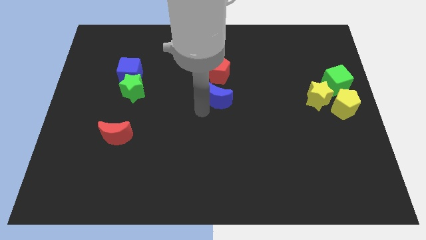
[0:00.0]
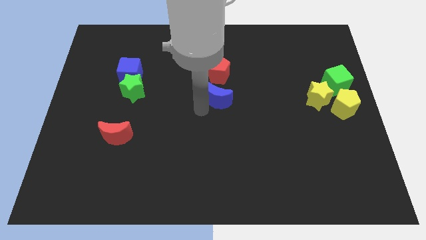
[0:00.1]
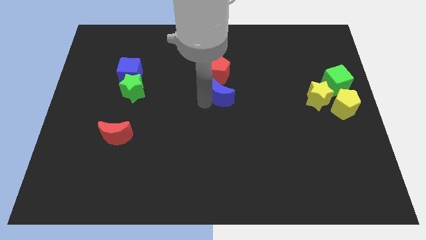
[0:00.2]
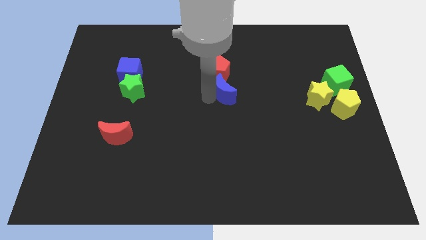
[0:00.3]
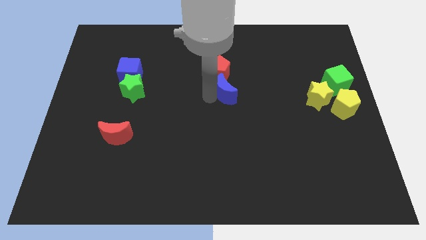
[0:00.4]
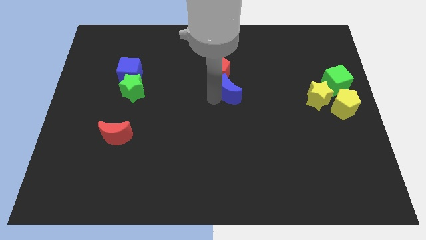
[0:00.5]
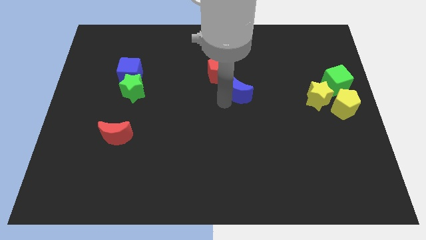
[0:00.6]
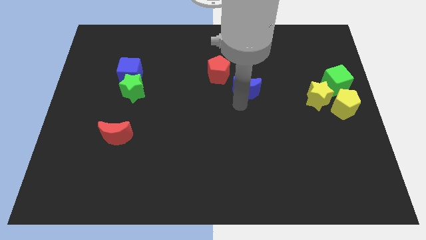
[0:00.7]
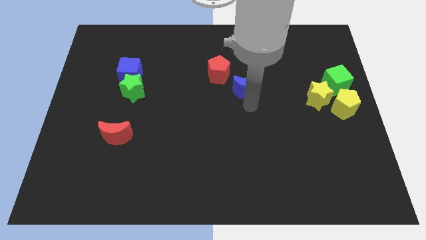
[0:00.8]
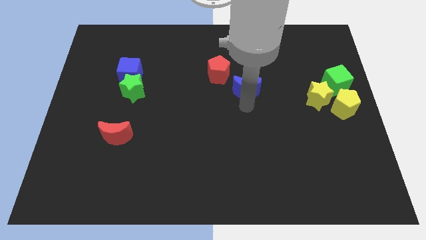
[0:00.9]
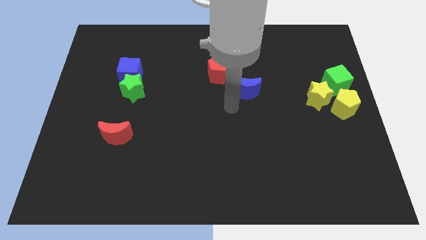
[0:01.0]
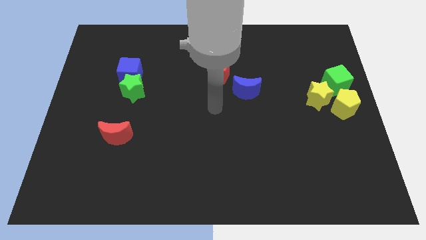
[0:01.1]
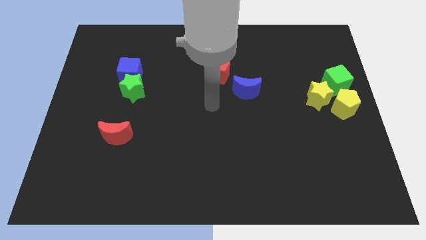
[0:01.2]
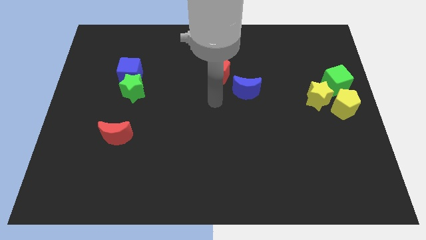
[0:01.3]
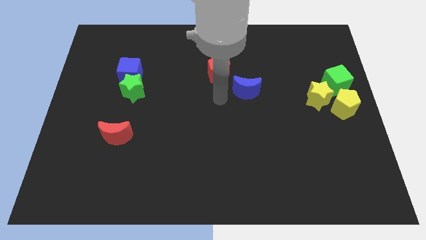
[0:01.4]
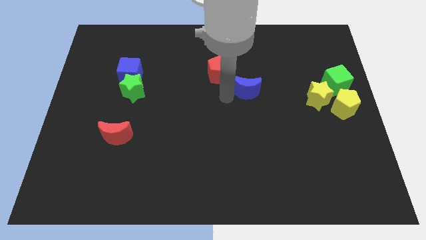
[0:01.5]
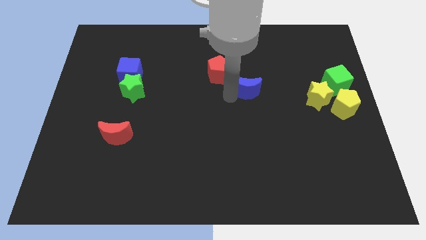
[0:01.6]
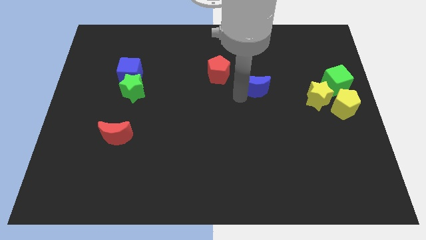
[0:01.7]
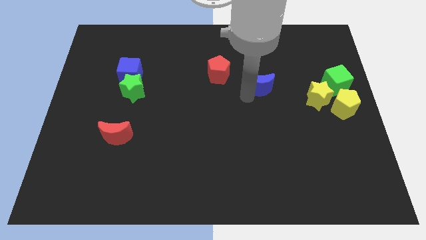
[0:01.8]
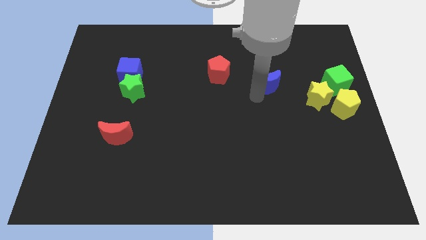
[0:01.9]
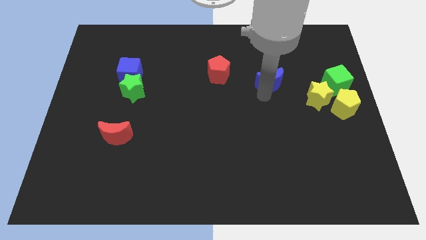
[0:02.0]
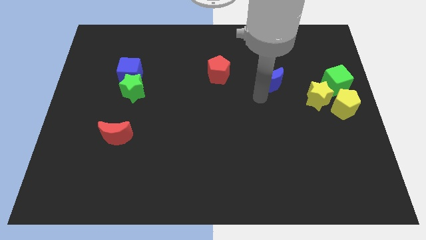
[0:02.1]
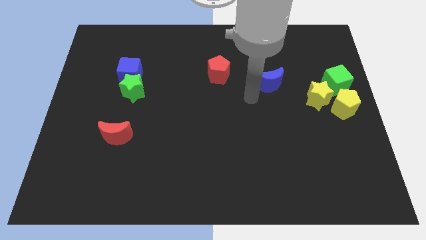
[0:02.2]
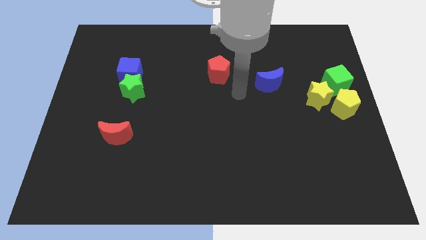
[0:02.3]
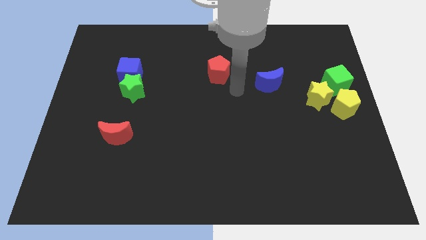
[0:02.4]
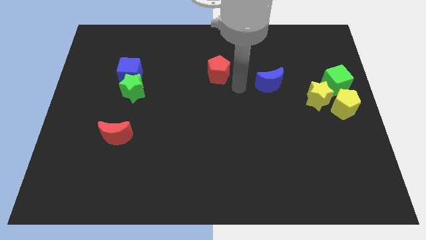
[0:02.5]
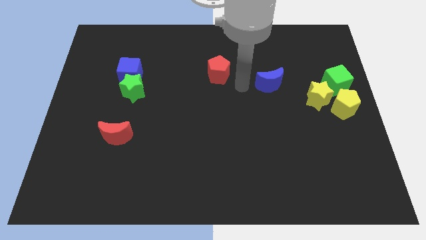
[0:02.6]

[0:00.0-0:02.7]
move blue cube towards green cube

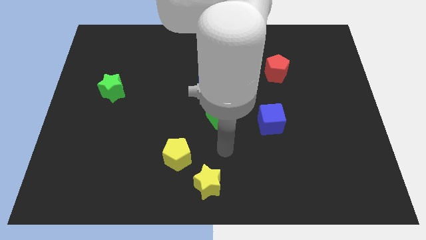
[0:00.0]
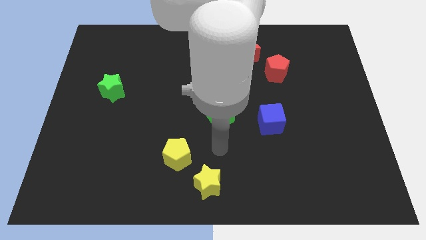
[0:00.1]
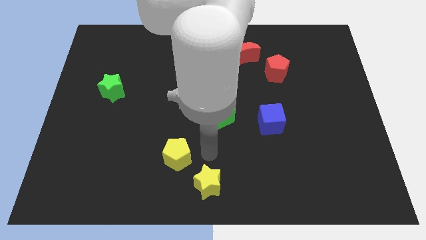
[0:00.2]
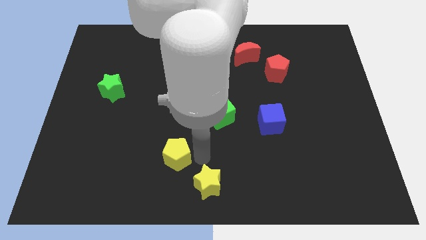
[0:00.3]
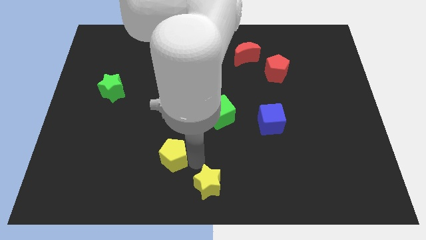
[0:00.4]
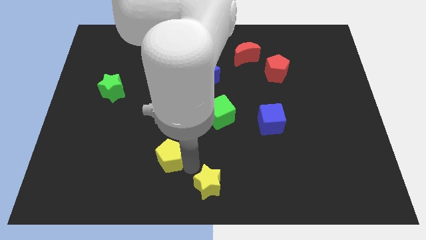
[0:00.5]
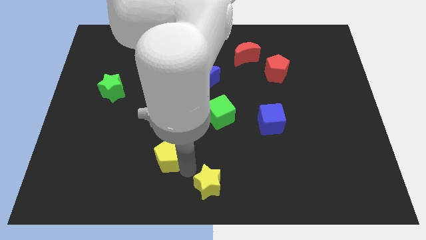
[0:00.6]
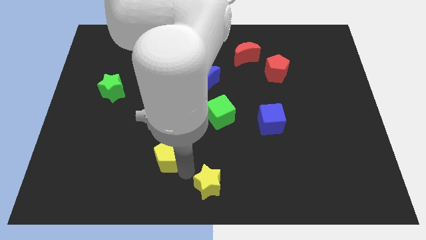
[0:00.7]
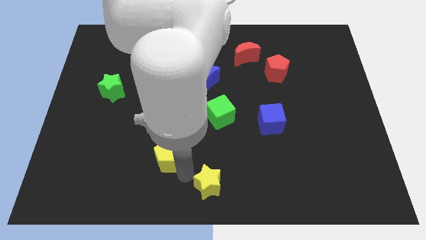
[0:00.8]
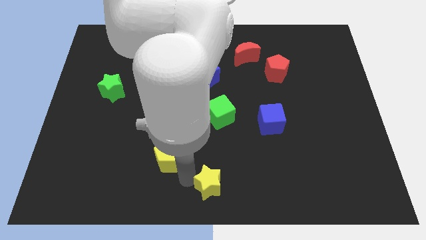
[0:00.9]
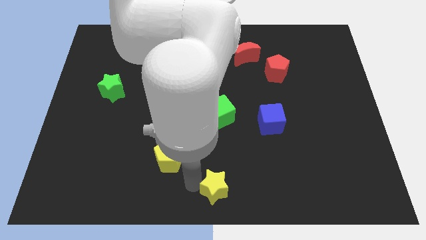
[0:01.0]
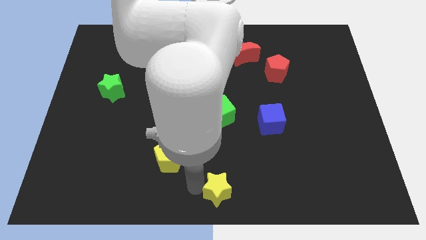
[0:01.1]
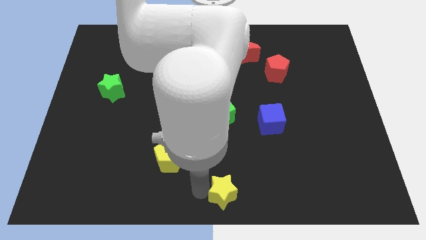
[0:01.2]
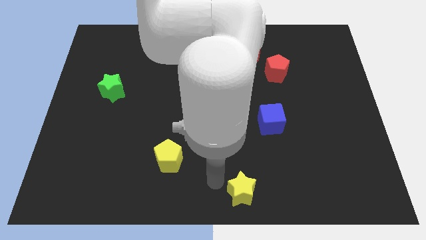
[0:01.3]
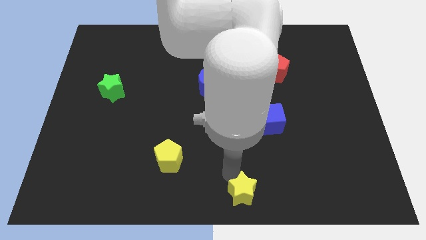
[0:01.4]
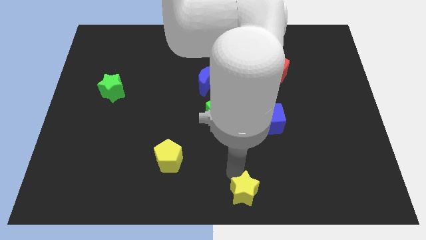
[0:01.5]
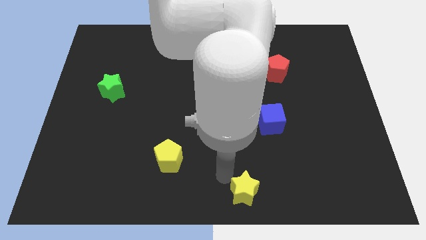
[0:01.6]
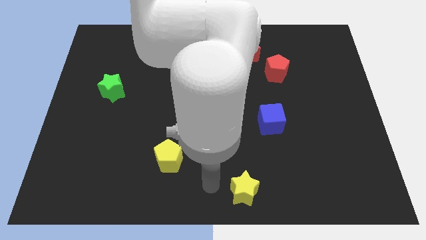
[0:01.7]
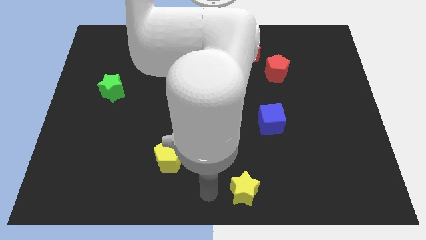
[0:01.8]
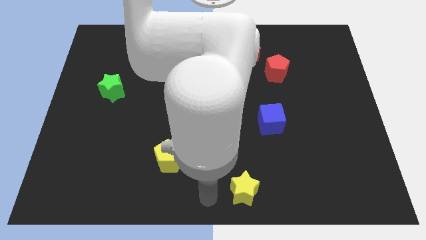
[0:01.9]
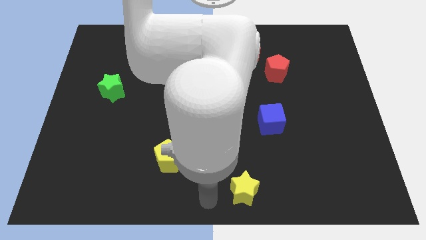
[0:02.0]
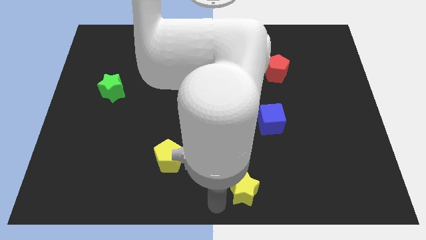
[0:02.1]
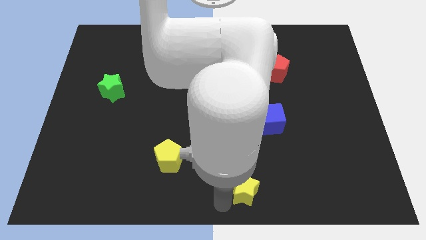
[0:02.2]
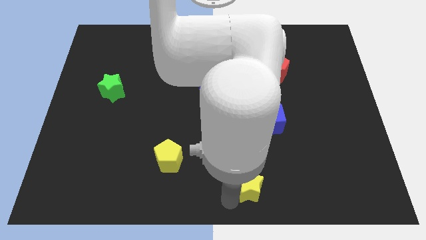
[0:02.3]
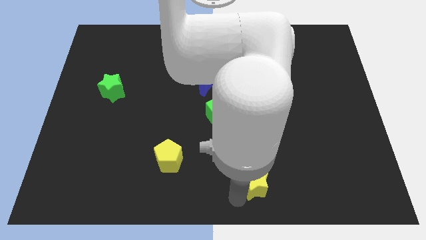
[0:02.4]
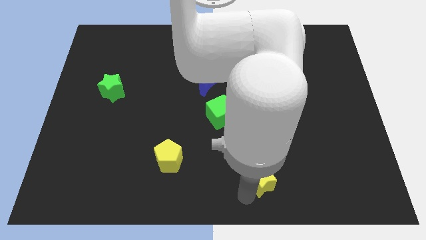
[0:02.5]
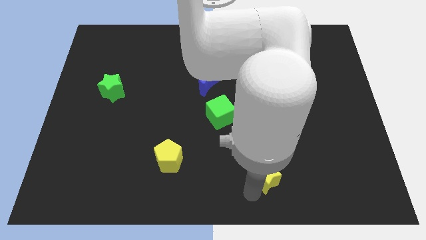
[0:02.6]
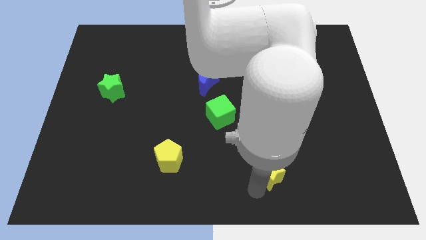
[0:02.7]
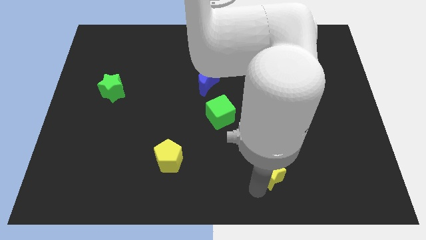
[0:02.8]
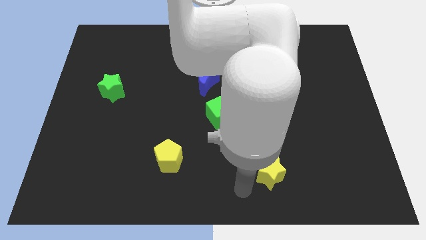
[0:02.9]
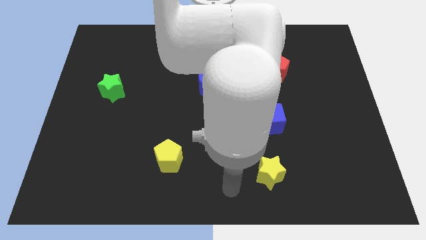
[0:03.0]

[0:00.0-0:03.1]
move yellow star below the blue cube

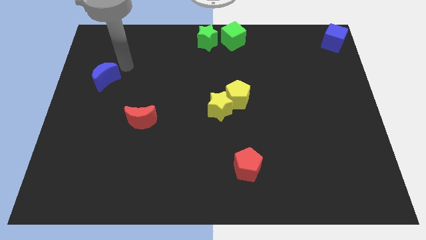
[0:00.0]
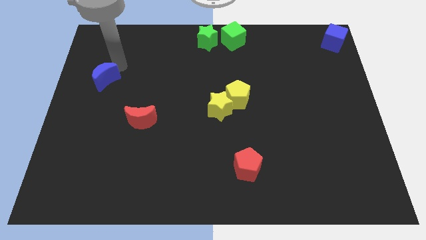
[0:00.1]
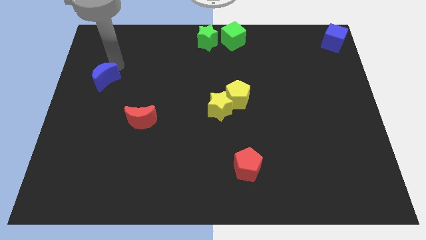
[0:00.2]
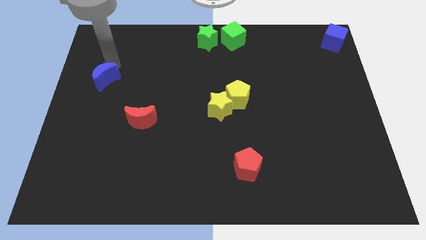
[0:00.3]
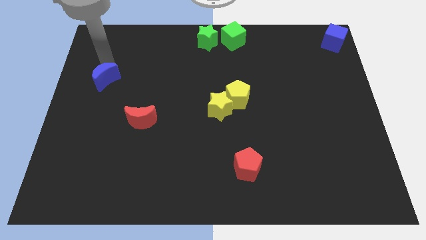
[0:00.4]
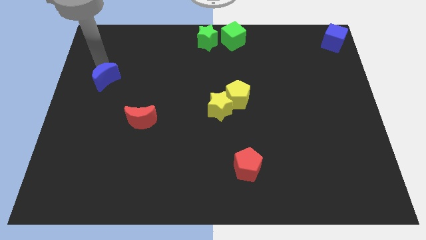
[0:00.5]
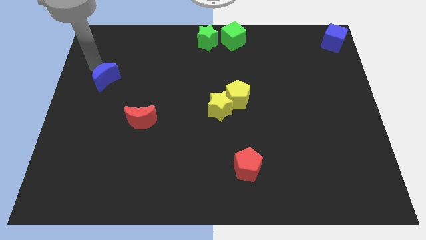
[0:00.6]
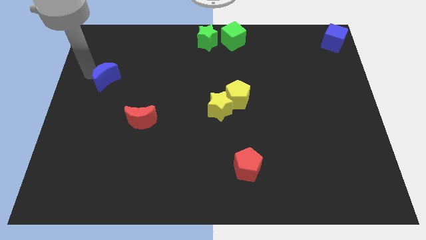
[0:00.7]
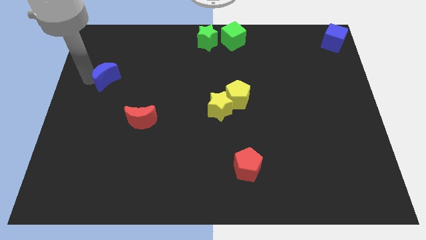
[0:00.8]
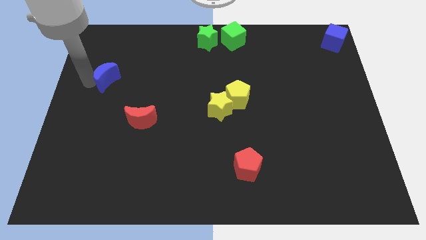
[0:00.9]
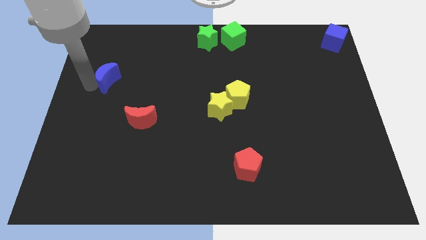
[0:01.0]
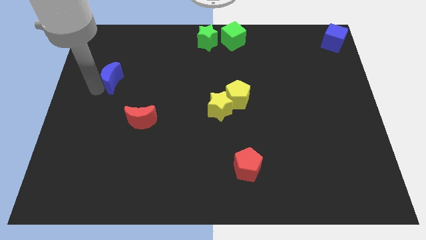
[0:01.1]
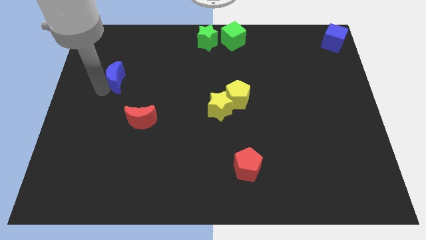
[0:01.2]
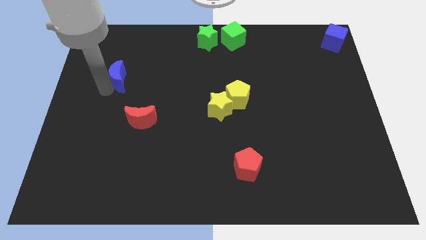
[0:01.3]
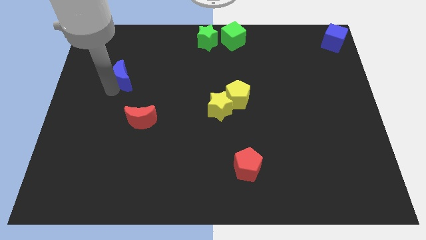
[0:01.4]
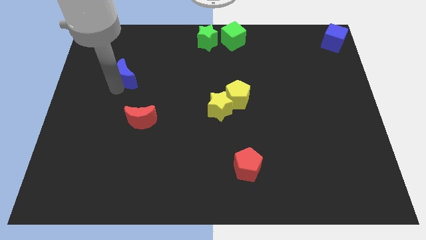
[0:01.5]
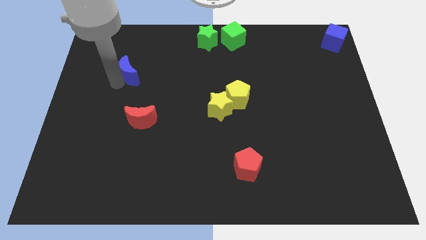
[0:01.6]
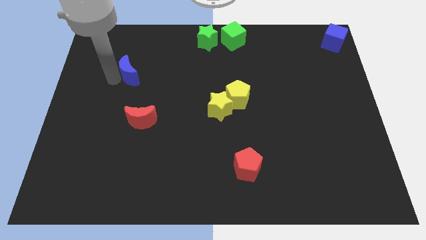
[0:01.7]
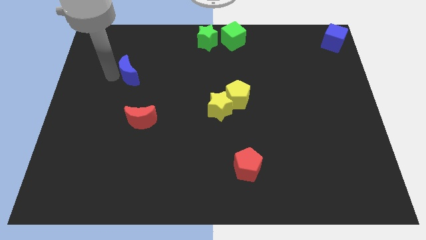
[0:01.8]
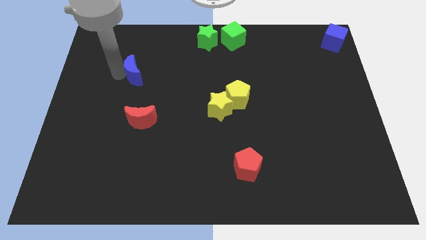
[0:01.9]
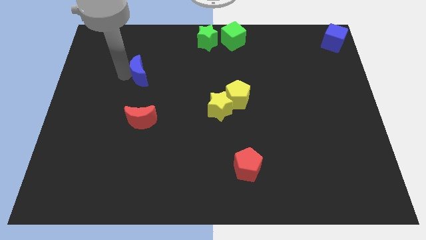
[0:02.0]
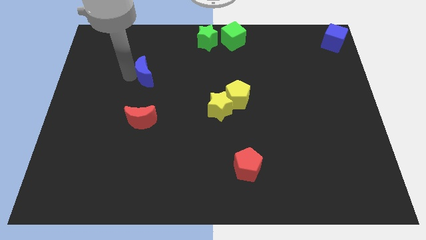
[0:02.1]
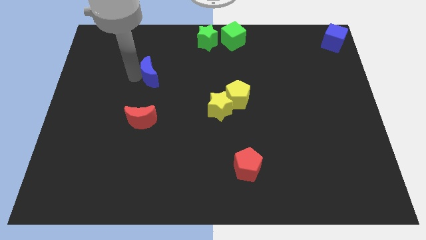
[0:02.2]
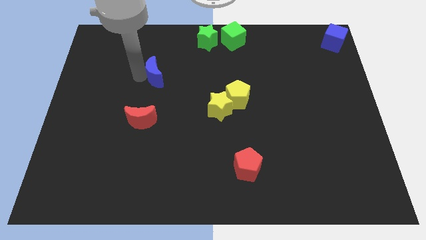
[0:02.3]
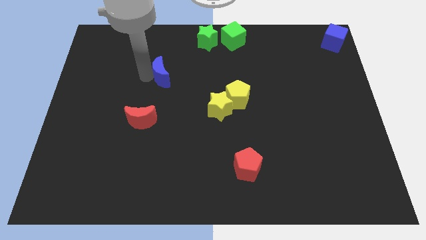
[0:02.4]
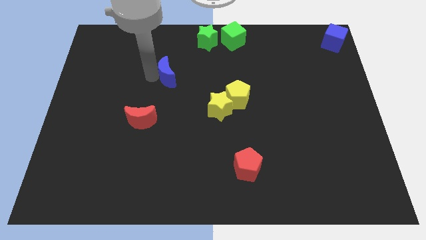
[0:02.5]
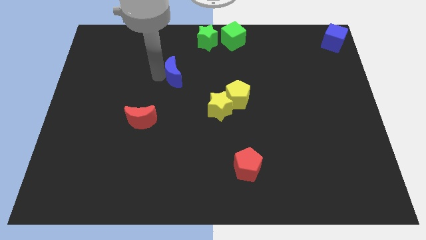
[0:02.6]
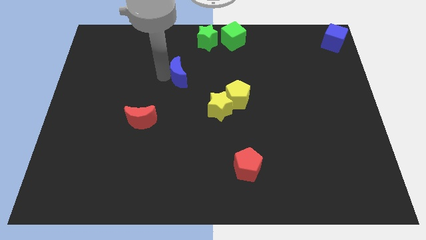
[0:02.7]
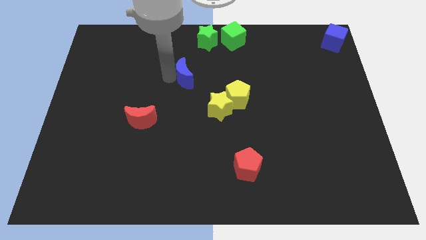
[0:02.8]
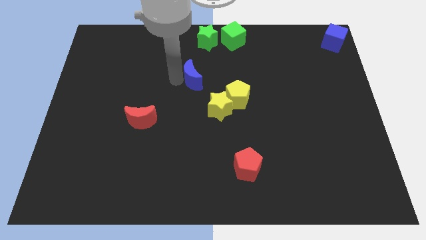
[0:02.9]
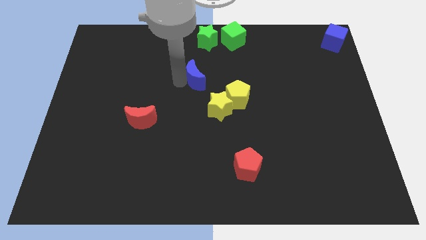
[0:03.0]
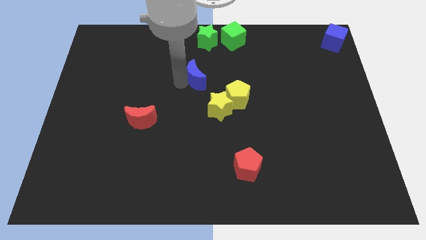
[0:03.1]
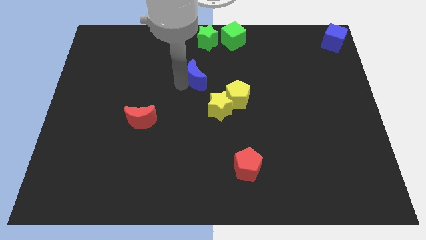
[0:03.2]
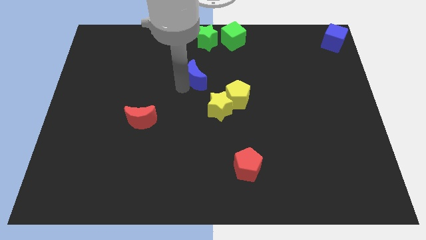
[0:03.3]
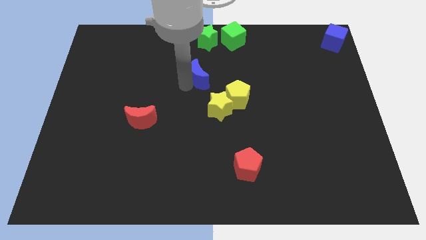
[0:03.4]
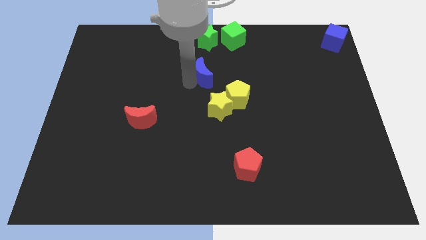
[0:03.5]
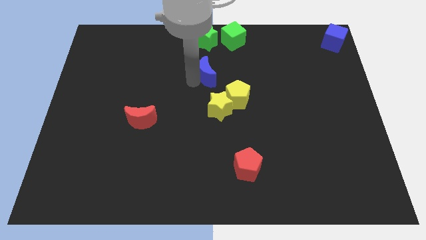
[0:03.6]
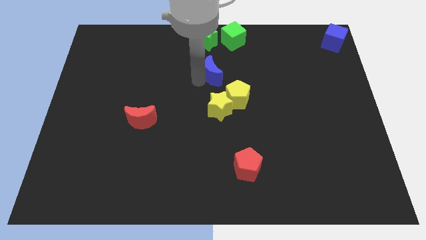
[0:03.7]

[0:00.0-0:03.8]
place the blue crescent in between the stars
